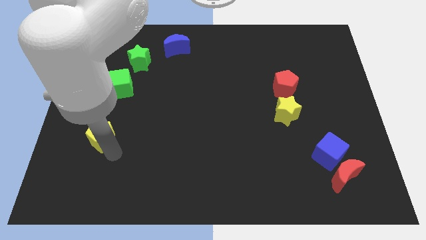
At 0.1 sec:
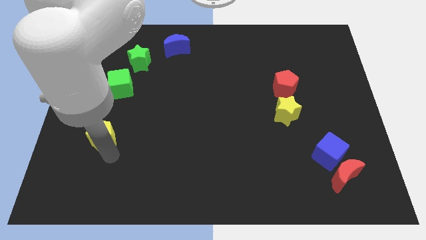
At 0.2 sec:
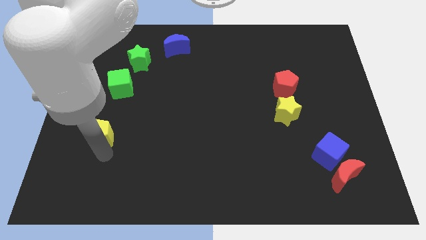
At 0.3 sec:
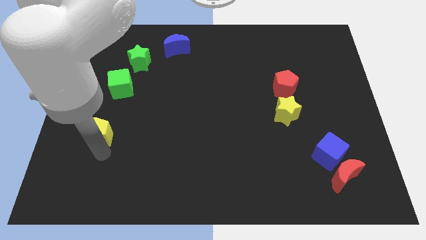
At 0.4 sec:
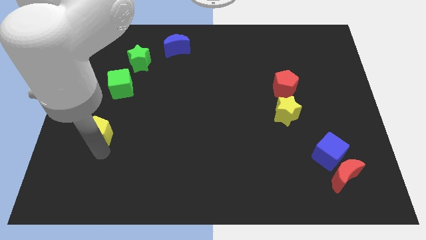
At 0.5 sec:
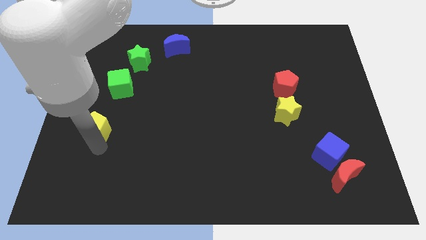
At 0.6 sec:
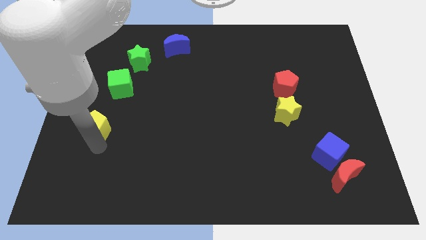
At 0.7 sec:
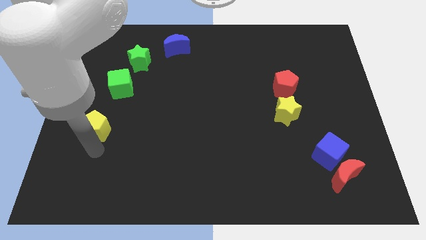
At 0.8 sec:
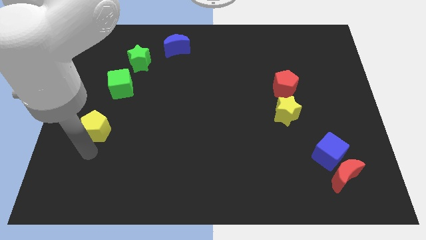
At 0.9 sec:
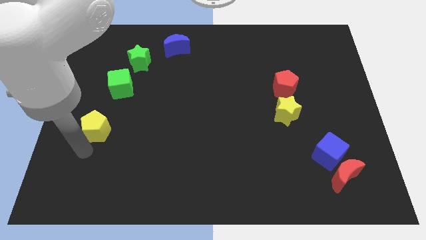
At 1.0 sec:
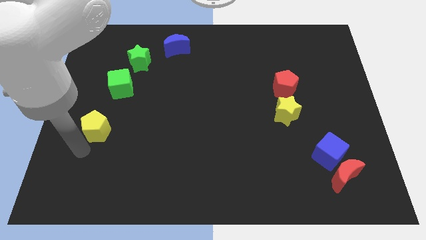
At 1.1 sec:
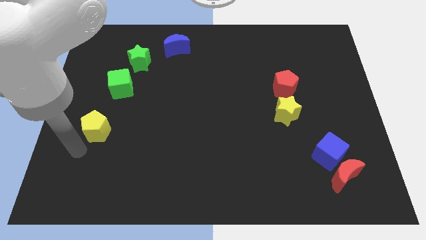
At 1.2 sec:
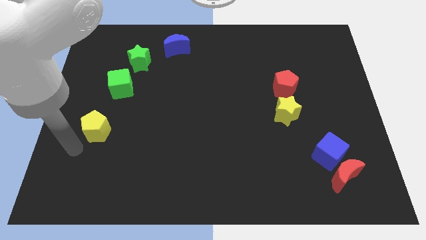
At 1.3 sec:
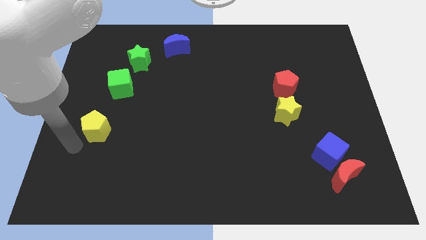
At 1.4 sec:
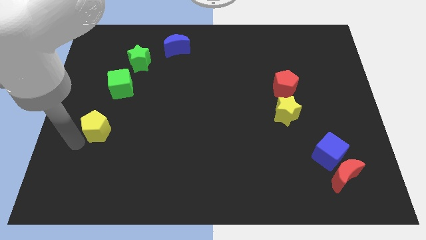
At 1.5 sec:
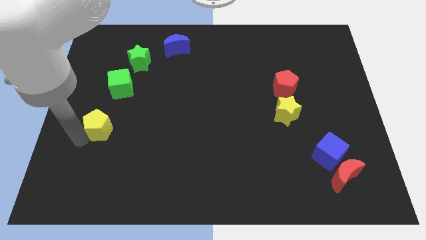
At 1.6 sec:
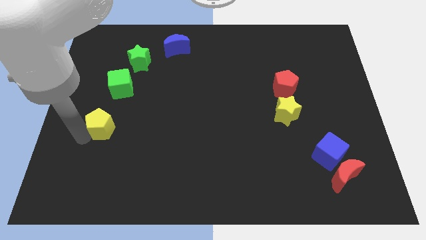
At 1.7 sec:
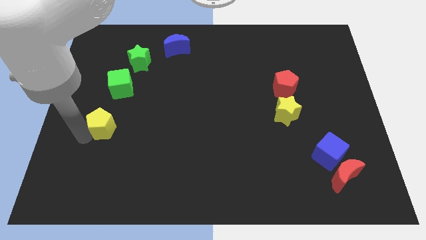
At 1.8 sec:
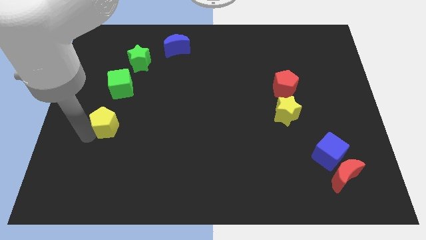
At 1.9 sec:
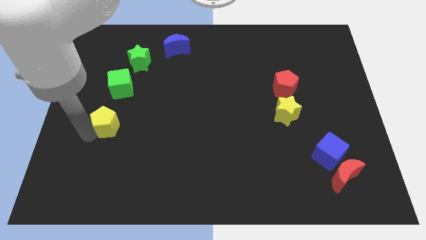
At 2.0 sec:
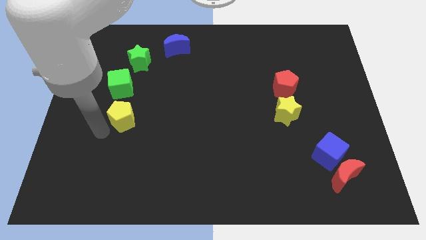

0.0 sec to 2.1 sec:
place the yellow pentagon below the green cube

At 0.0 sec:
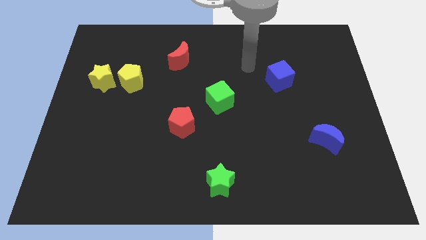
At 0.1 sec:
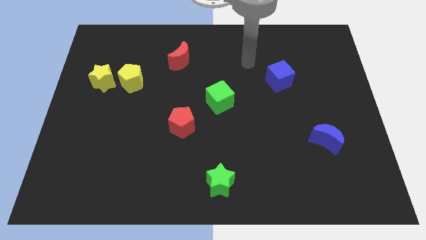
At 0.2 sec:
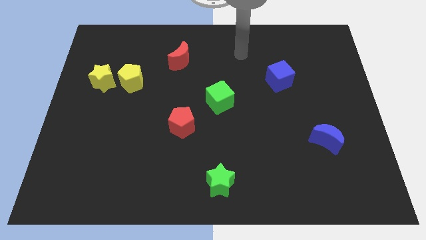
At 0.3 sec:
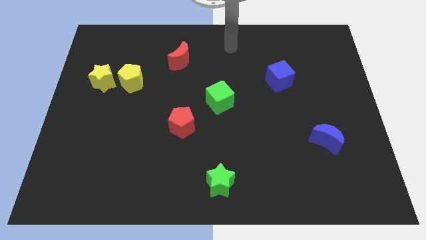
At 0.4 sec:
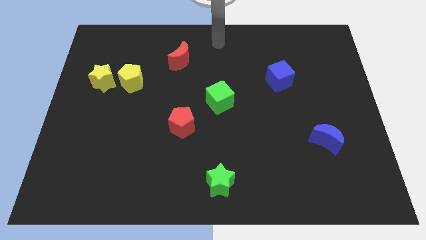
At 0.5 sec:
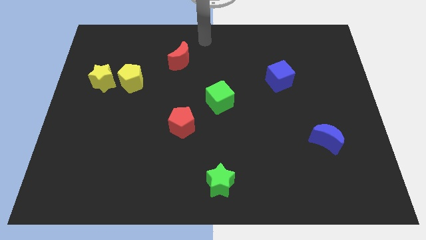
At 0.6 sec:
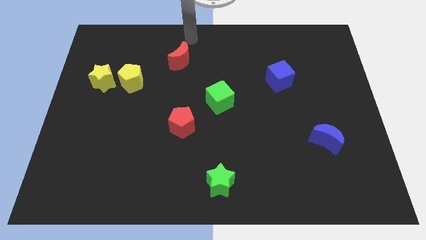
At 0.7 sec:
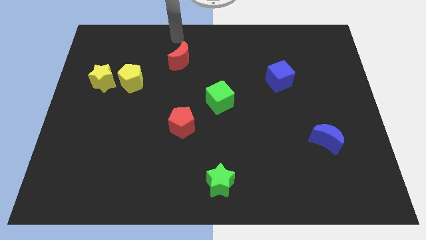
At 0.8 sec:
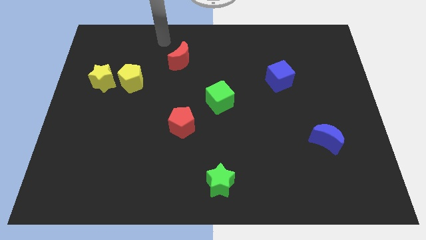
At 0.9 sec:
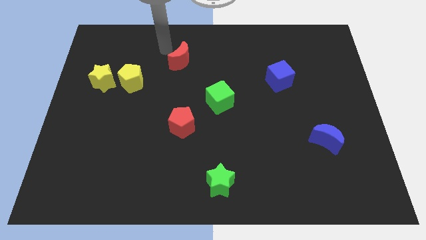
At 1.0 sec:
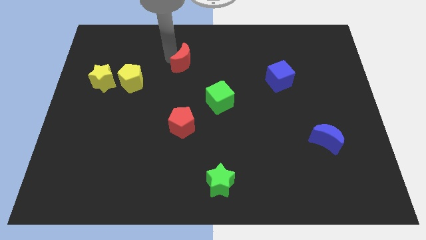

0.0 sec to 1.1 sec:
touch the red crescent

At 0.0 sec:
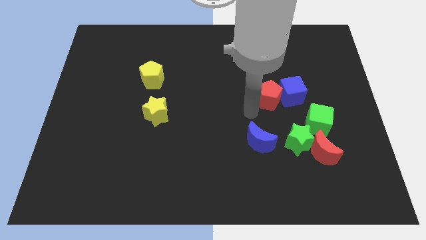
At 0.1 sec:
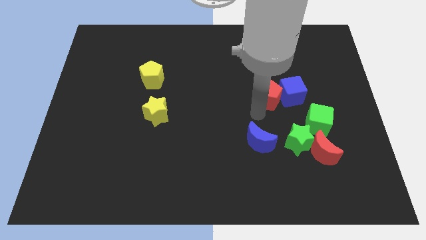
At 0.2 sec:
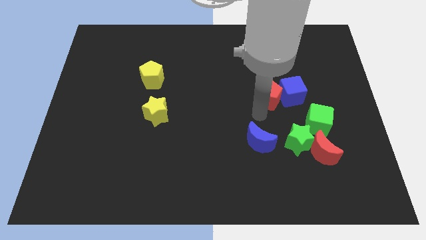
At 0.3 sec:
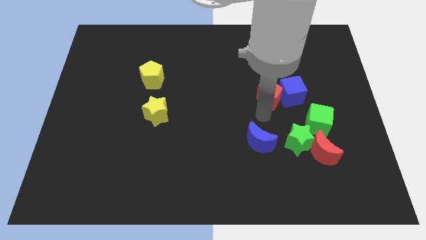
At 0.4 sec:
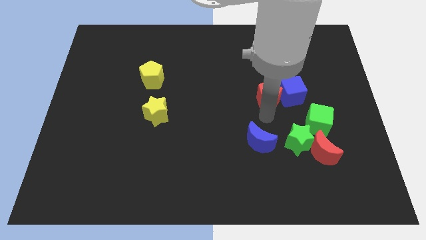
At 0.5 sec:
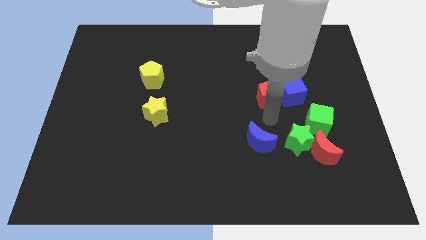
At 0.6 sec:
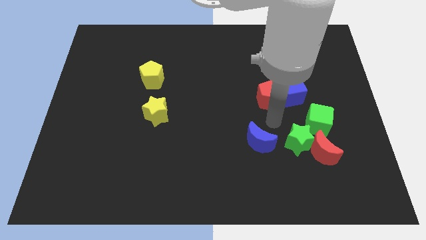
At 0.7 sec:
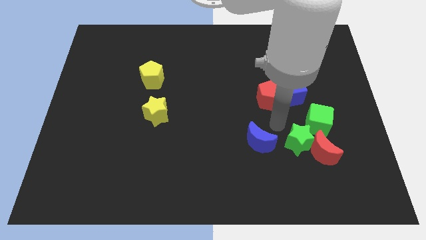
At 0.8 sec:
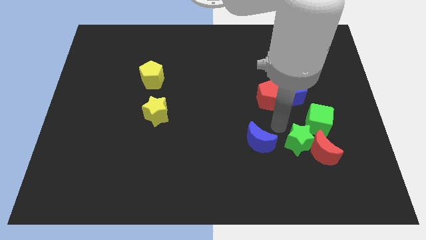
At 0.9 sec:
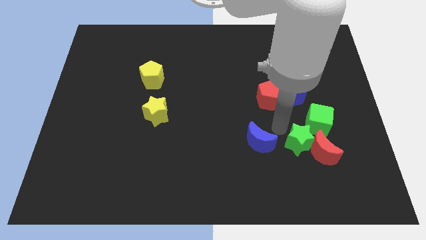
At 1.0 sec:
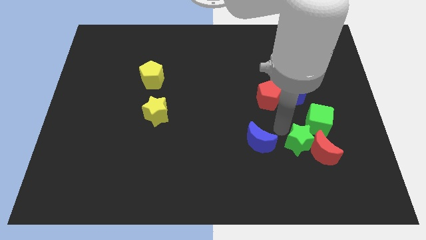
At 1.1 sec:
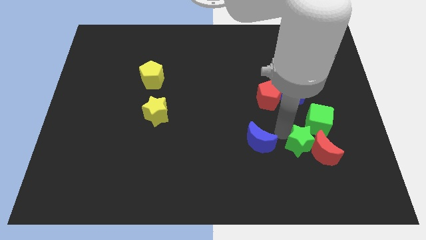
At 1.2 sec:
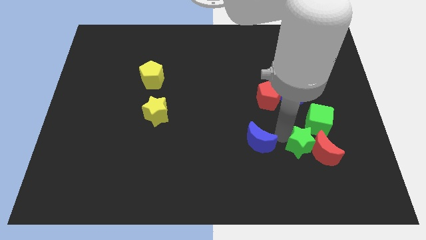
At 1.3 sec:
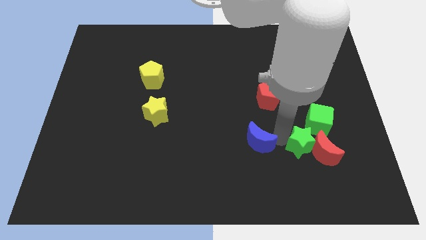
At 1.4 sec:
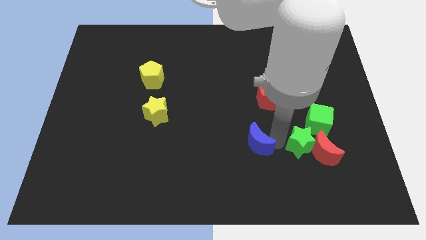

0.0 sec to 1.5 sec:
tap at top left side of the green star

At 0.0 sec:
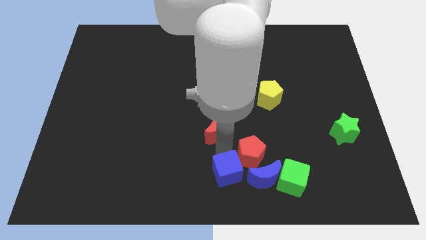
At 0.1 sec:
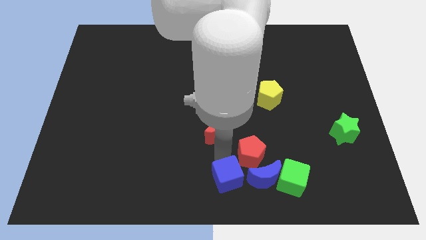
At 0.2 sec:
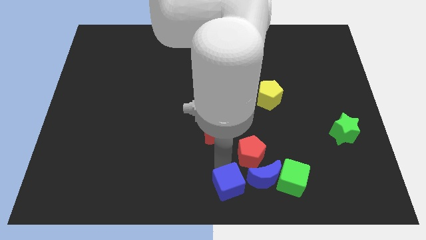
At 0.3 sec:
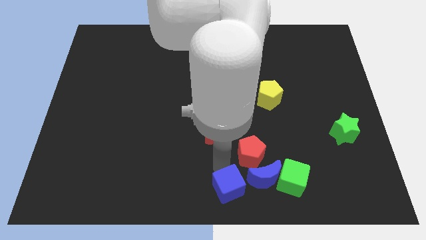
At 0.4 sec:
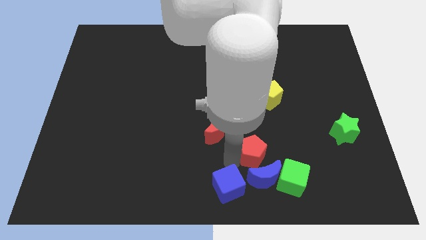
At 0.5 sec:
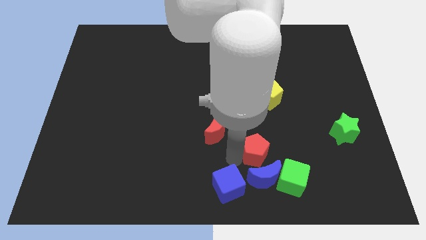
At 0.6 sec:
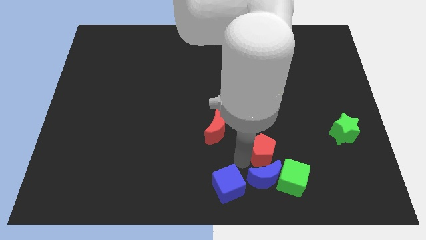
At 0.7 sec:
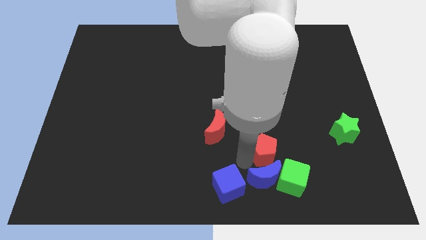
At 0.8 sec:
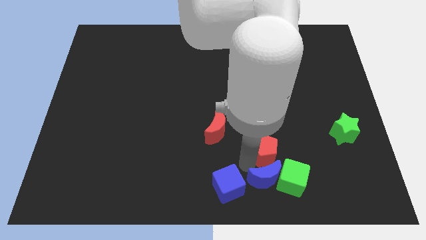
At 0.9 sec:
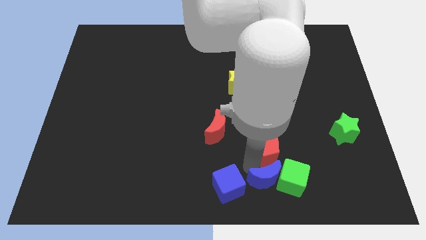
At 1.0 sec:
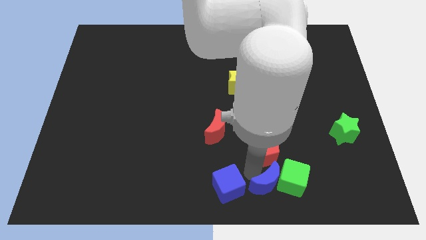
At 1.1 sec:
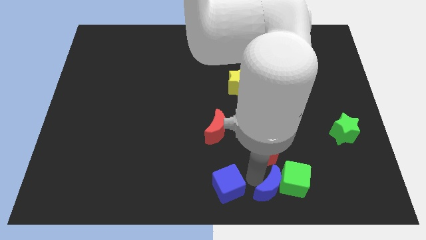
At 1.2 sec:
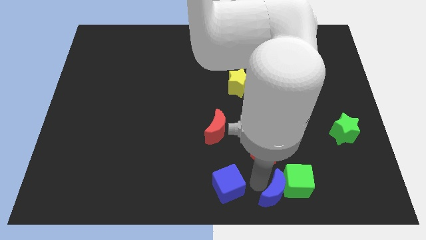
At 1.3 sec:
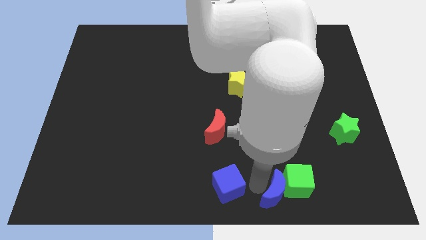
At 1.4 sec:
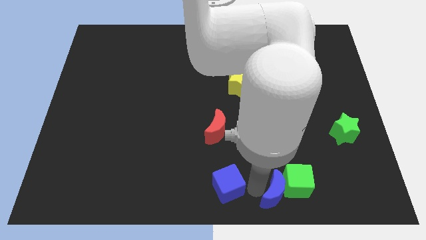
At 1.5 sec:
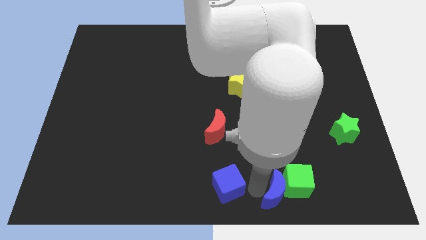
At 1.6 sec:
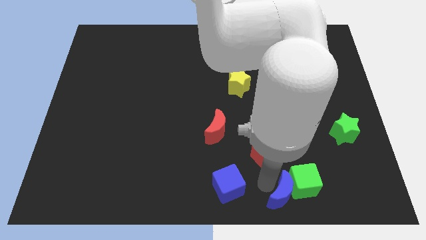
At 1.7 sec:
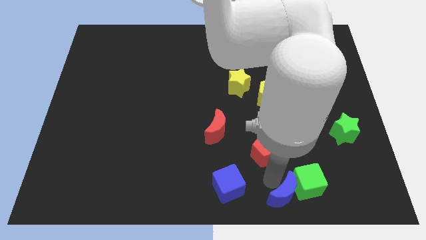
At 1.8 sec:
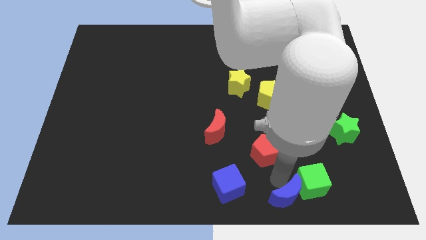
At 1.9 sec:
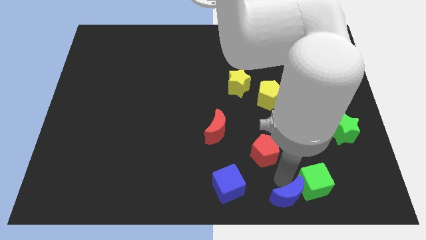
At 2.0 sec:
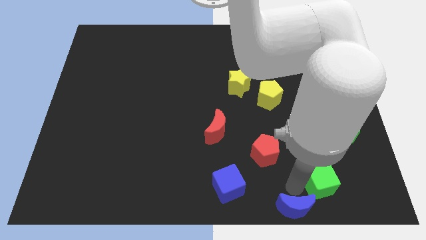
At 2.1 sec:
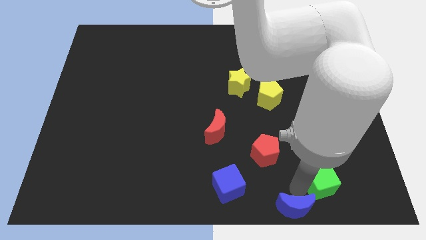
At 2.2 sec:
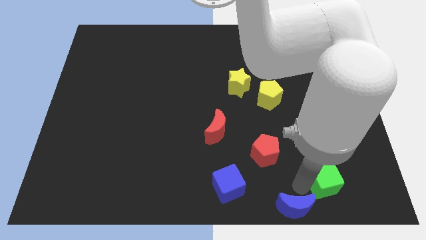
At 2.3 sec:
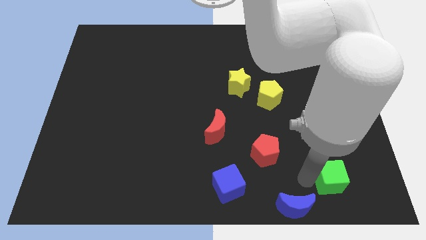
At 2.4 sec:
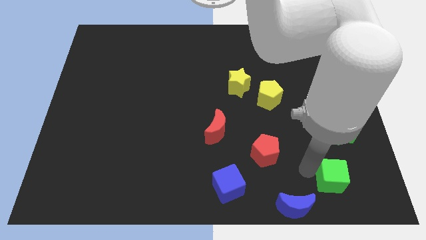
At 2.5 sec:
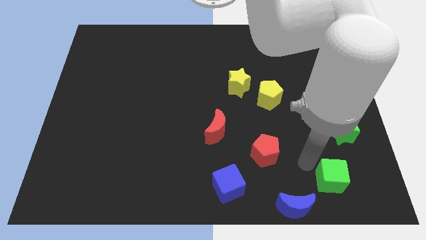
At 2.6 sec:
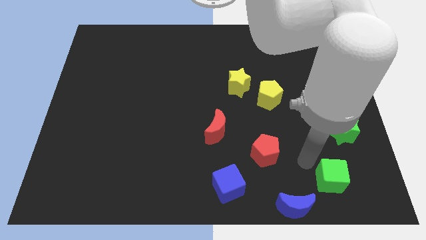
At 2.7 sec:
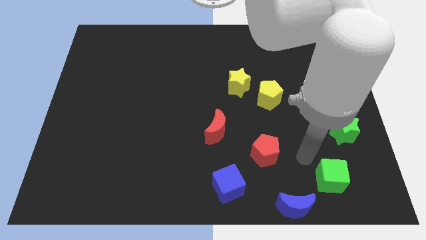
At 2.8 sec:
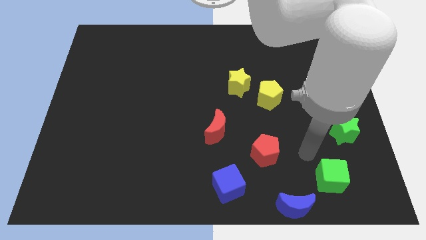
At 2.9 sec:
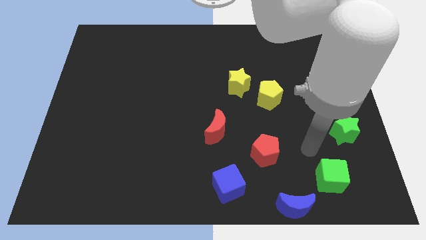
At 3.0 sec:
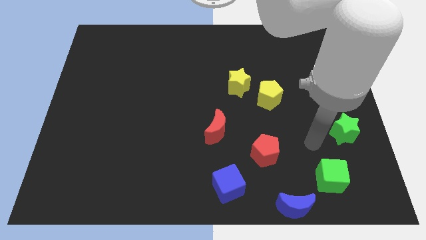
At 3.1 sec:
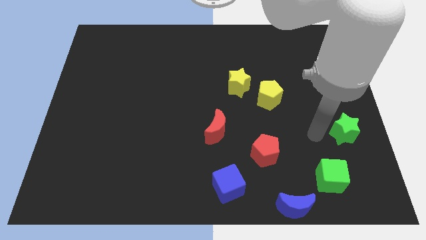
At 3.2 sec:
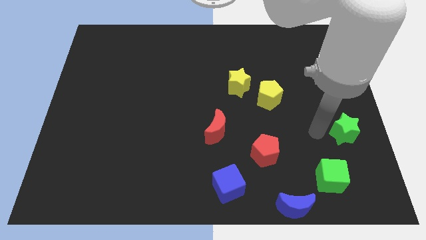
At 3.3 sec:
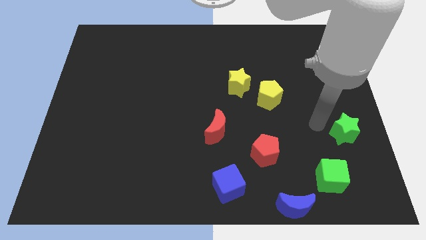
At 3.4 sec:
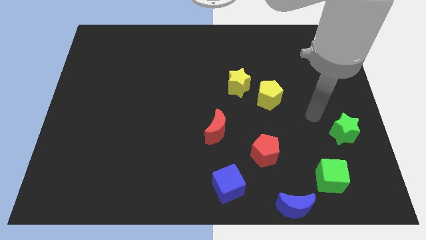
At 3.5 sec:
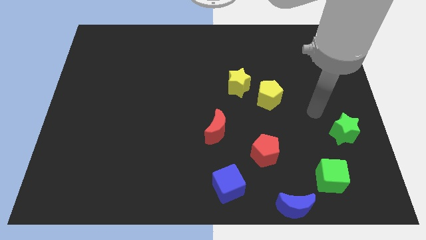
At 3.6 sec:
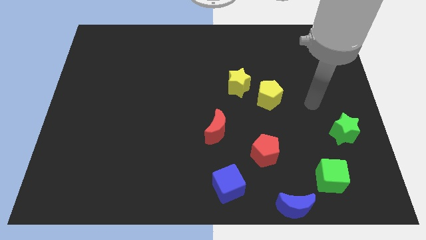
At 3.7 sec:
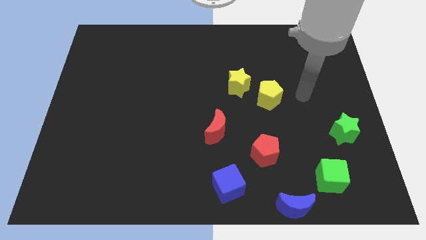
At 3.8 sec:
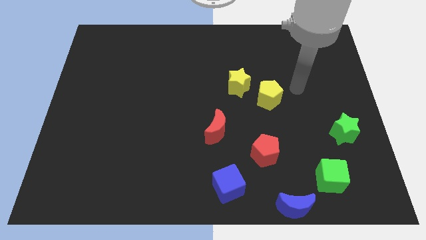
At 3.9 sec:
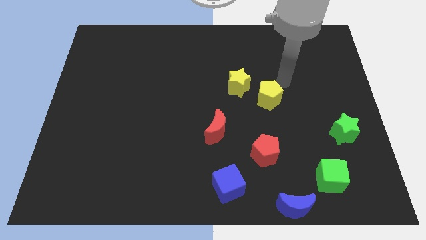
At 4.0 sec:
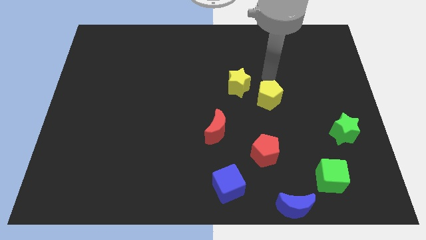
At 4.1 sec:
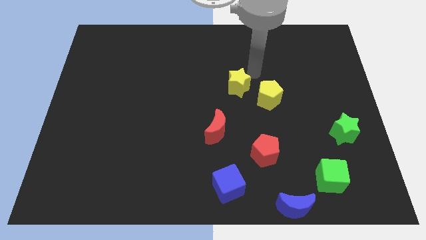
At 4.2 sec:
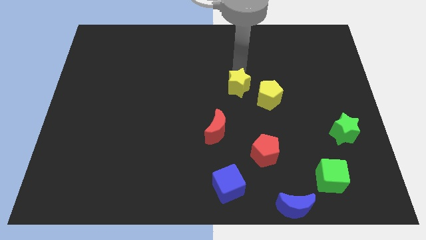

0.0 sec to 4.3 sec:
place the blue moon diagonally to the left of the green cube
